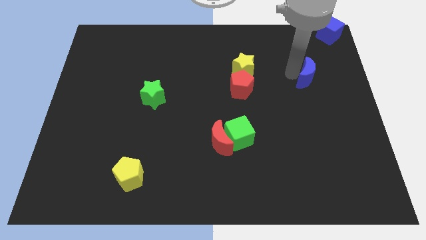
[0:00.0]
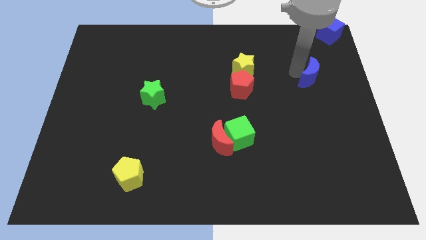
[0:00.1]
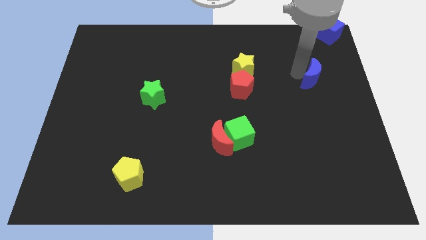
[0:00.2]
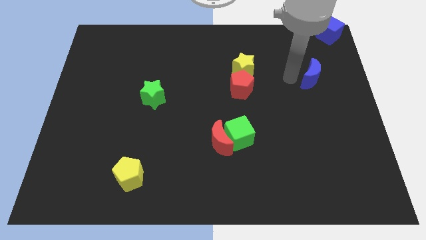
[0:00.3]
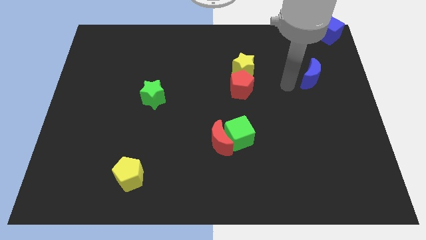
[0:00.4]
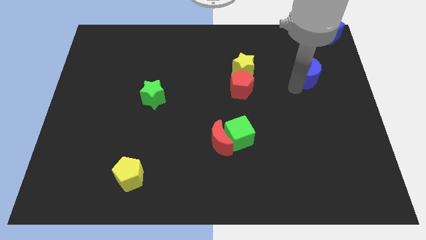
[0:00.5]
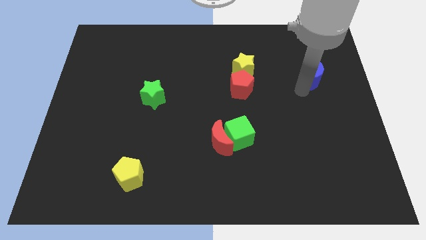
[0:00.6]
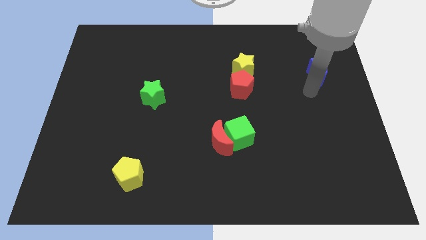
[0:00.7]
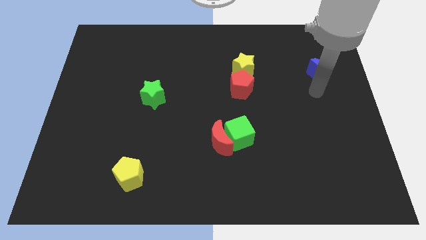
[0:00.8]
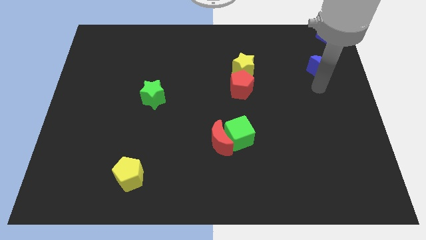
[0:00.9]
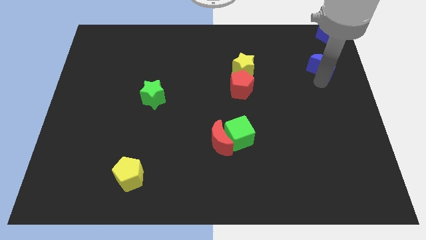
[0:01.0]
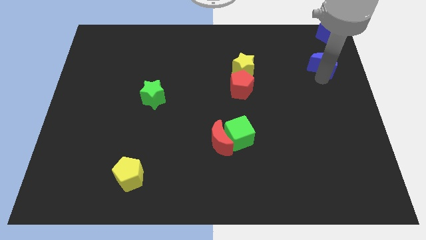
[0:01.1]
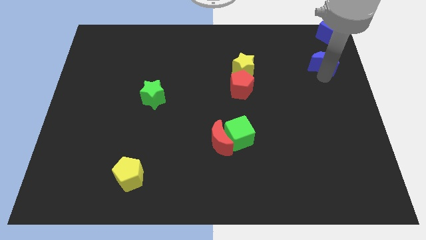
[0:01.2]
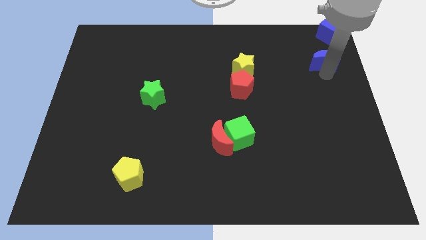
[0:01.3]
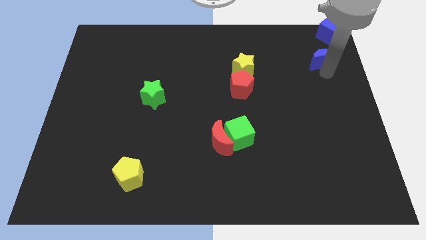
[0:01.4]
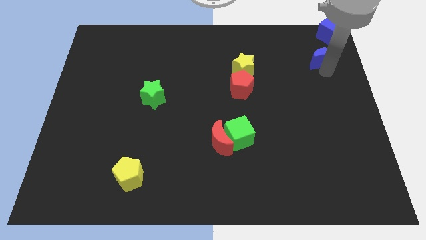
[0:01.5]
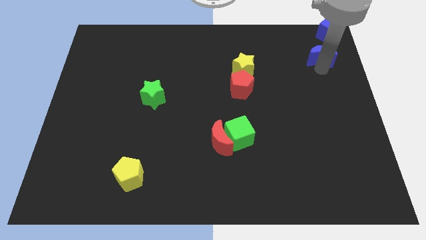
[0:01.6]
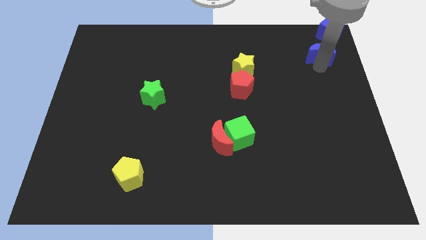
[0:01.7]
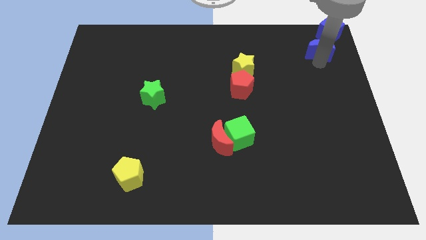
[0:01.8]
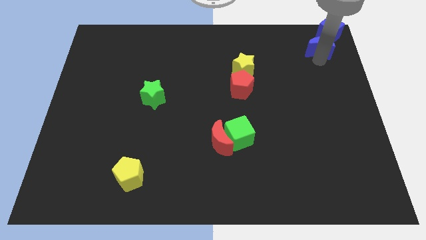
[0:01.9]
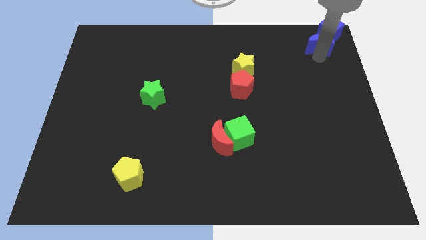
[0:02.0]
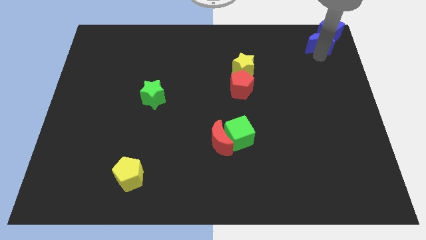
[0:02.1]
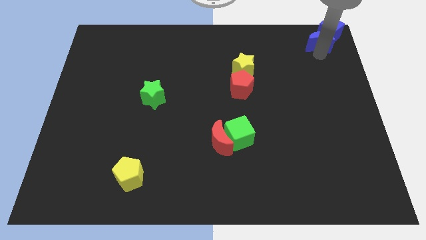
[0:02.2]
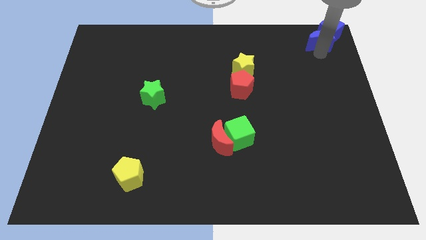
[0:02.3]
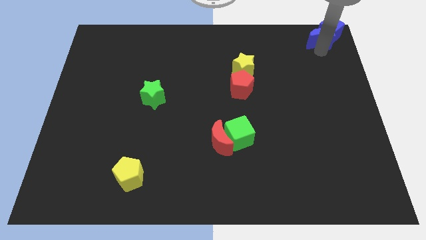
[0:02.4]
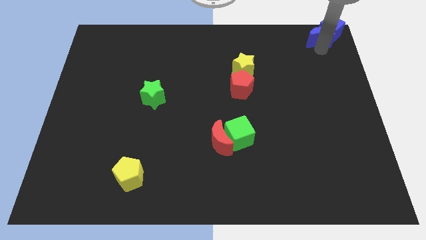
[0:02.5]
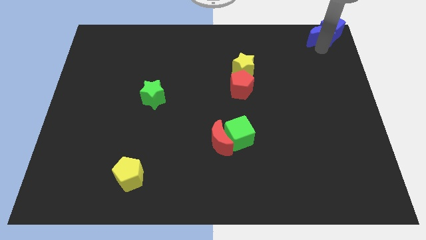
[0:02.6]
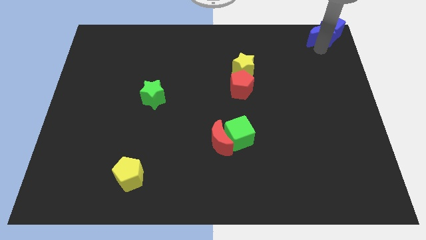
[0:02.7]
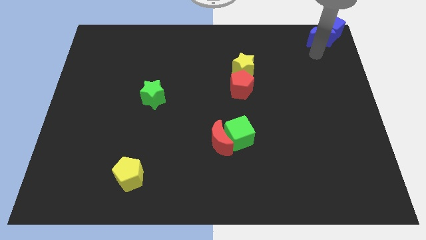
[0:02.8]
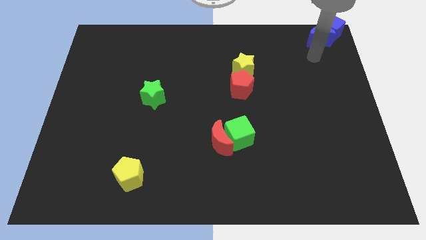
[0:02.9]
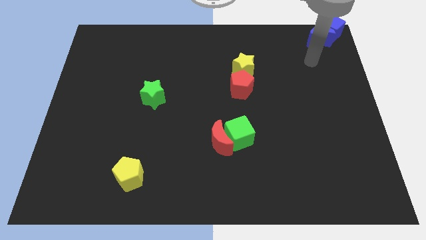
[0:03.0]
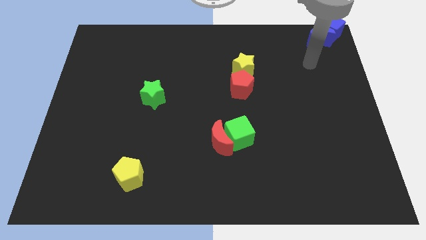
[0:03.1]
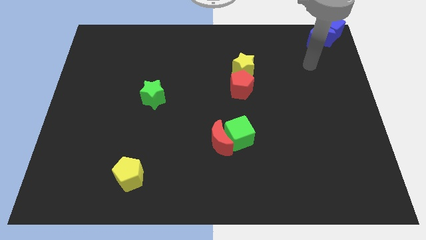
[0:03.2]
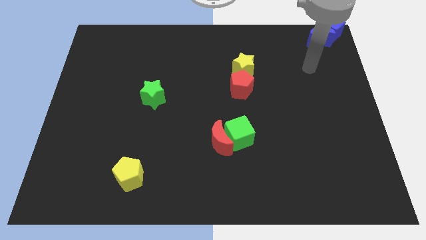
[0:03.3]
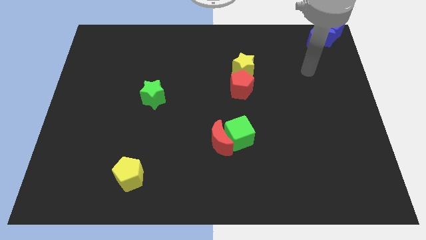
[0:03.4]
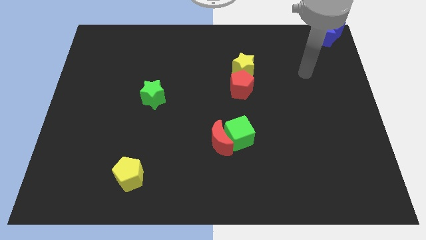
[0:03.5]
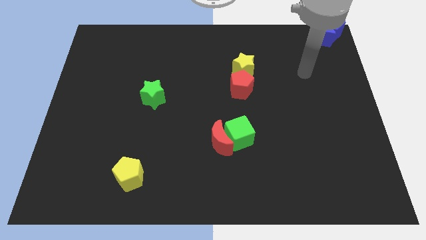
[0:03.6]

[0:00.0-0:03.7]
push the blue crescent into blue cube

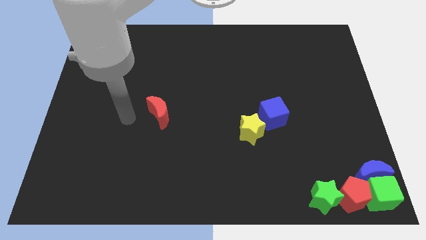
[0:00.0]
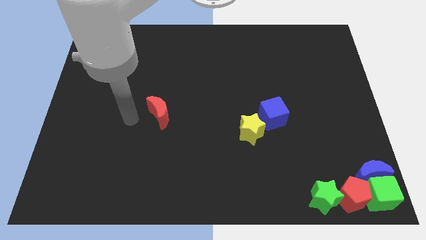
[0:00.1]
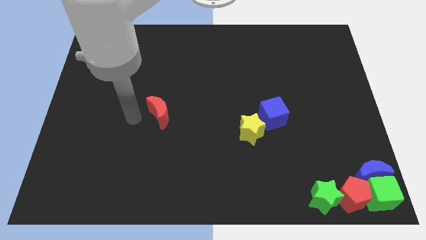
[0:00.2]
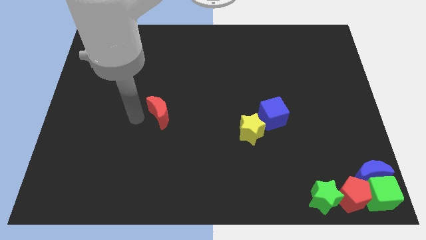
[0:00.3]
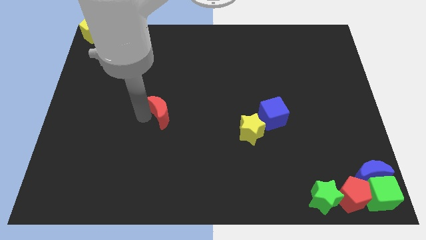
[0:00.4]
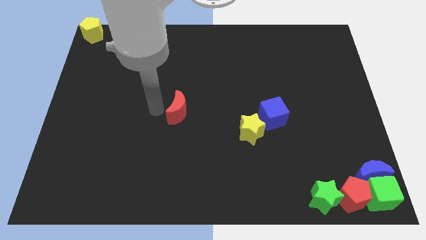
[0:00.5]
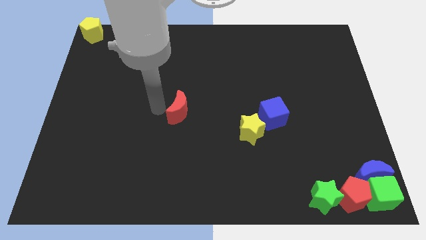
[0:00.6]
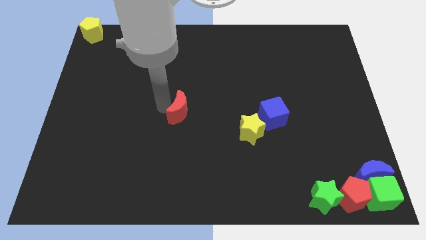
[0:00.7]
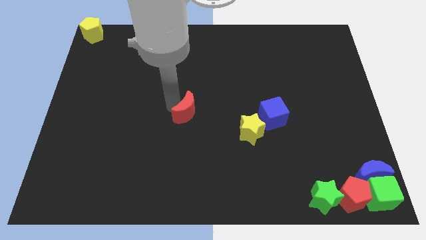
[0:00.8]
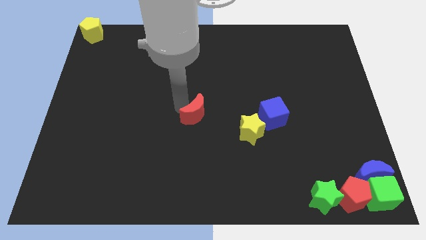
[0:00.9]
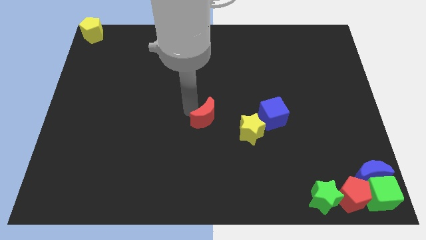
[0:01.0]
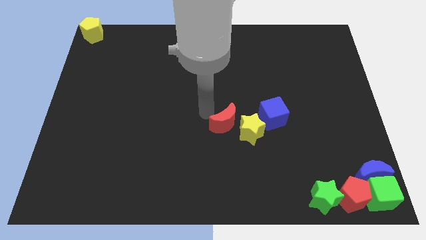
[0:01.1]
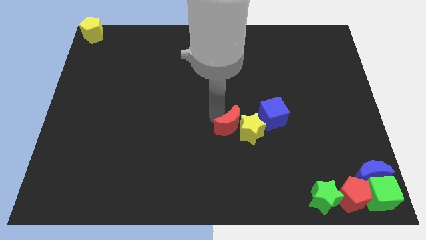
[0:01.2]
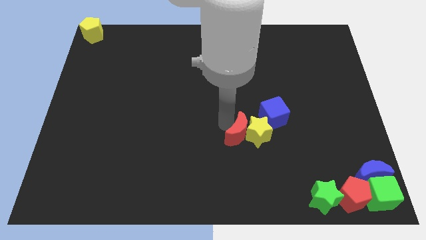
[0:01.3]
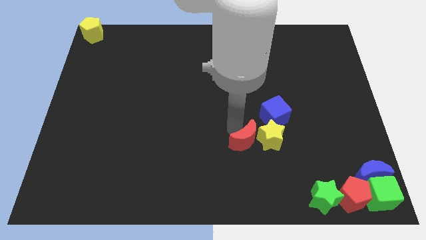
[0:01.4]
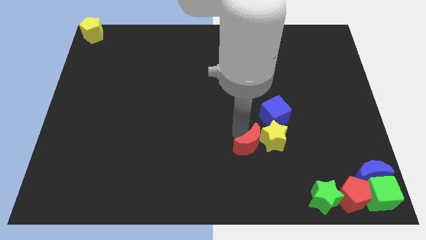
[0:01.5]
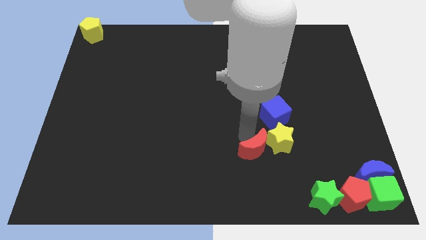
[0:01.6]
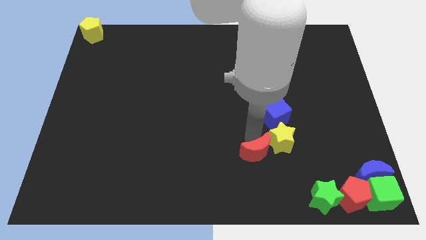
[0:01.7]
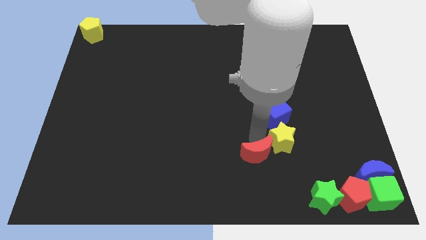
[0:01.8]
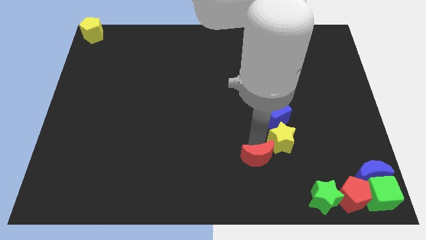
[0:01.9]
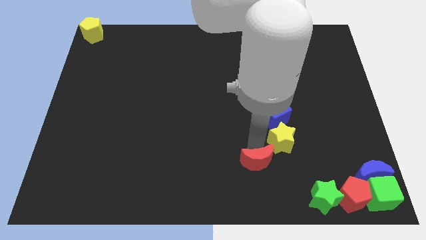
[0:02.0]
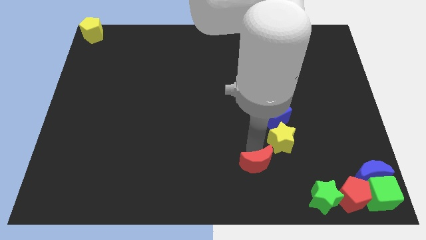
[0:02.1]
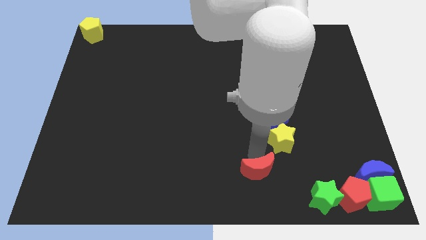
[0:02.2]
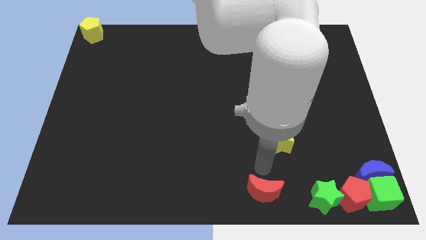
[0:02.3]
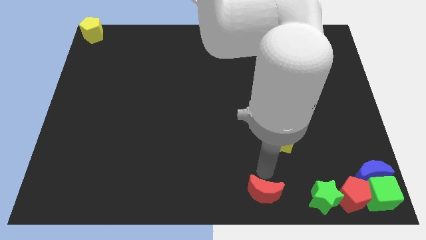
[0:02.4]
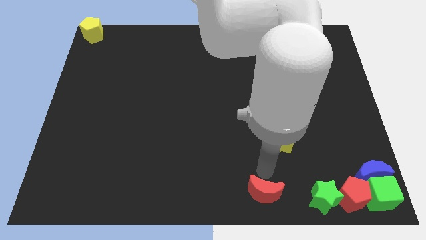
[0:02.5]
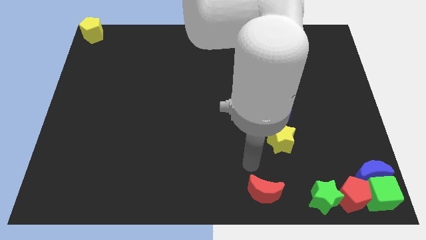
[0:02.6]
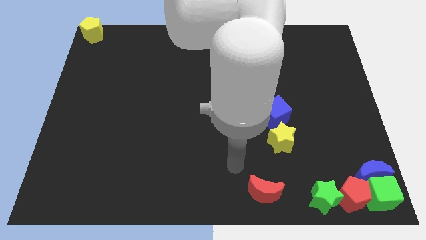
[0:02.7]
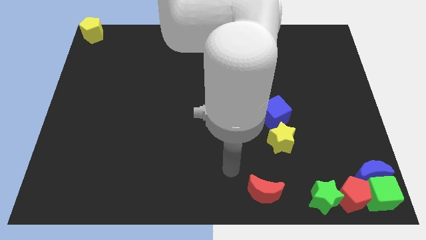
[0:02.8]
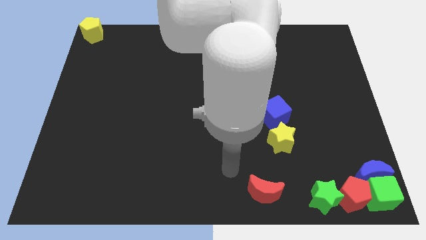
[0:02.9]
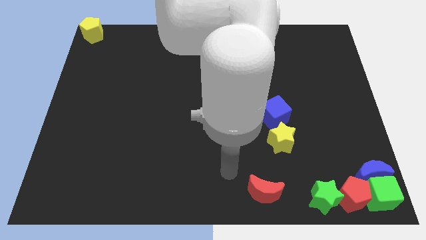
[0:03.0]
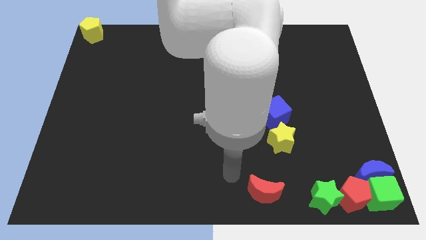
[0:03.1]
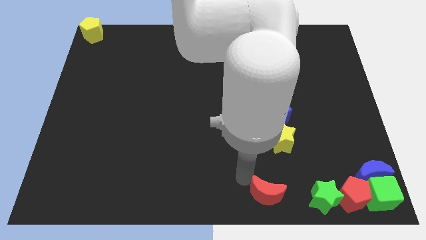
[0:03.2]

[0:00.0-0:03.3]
place red crescent parallel left to green star

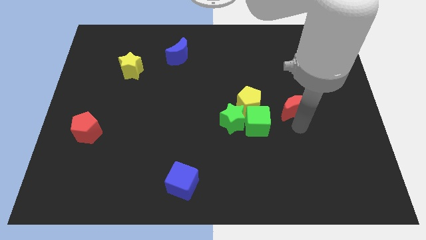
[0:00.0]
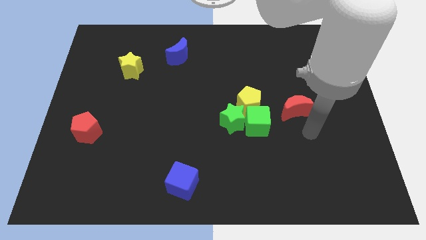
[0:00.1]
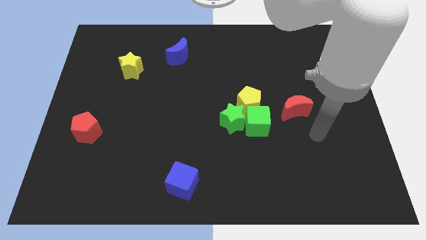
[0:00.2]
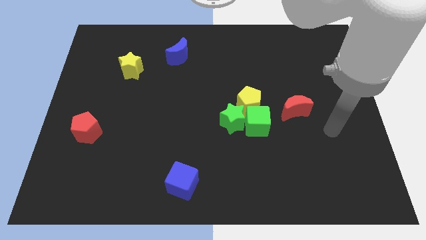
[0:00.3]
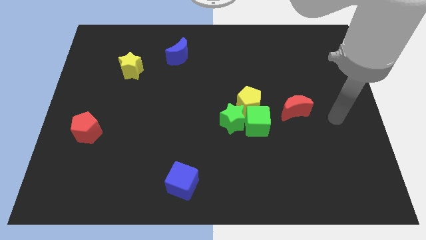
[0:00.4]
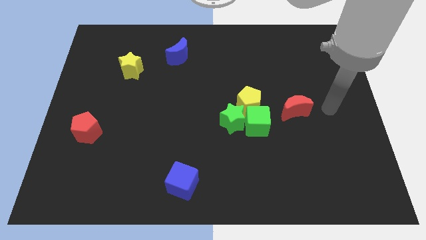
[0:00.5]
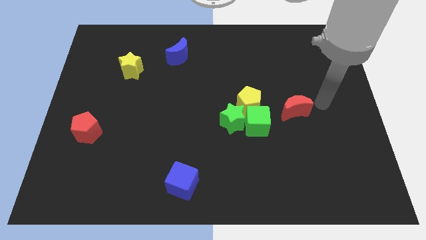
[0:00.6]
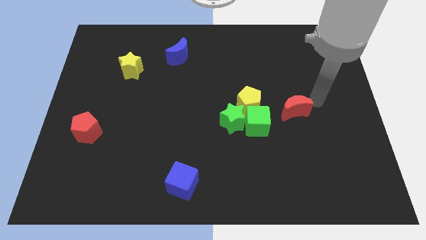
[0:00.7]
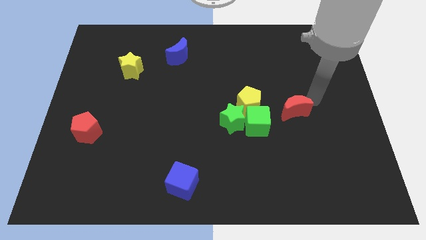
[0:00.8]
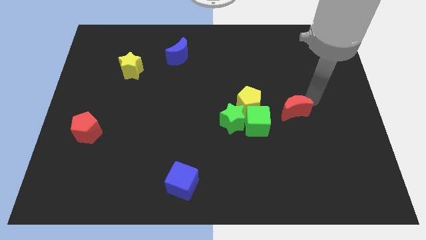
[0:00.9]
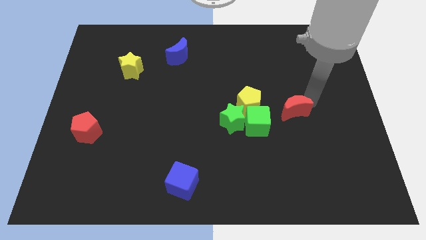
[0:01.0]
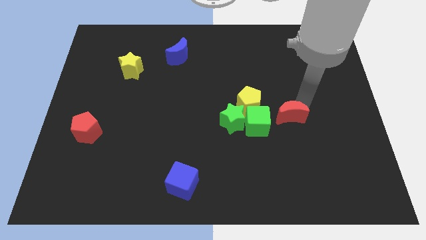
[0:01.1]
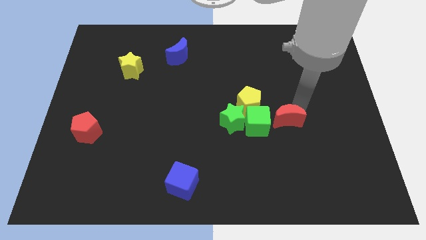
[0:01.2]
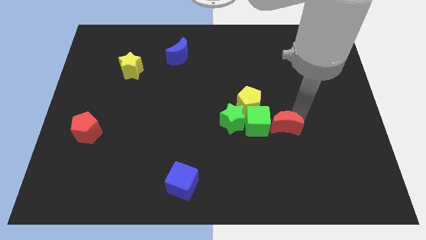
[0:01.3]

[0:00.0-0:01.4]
move the red crescent close to the green cube

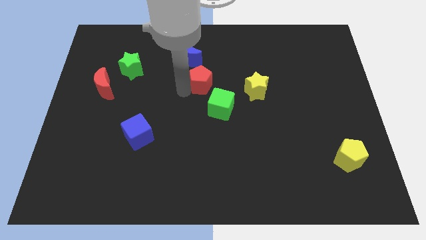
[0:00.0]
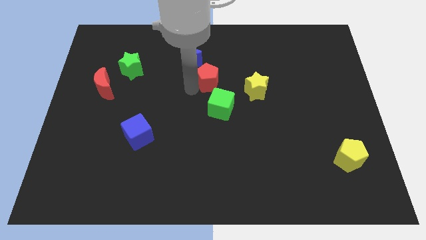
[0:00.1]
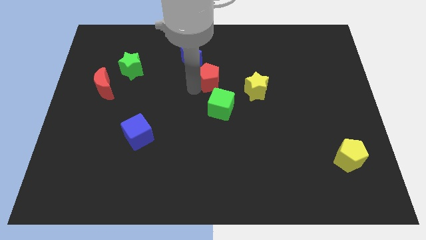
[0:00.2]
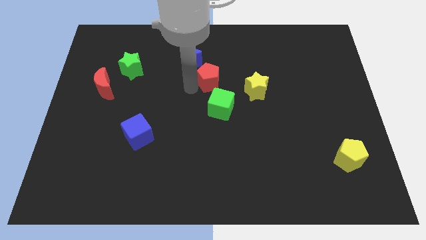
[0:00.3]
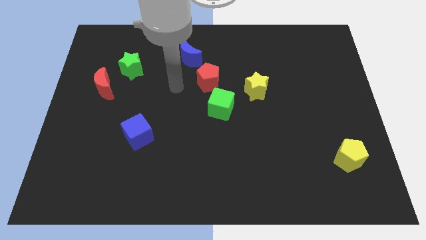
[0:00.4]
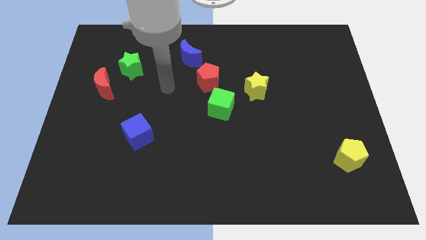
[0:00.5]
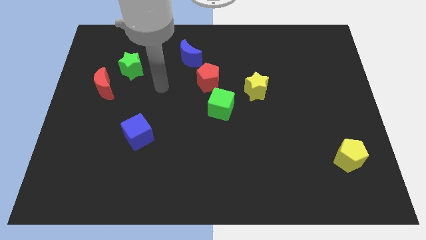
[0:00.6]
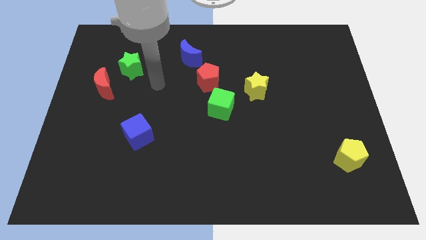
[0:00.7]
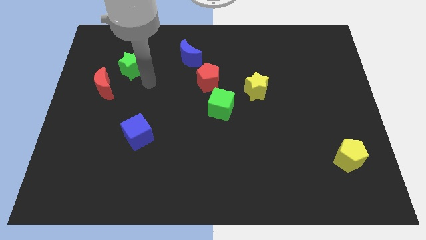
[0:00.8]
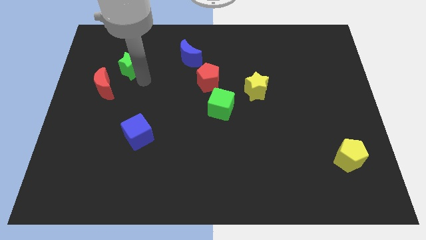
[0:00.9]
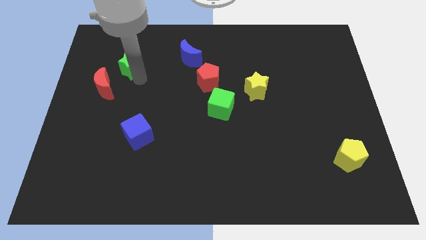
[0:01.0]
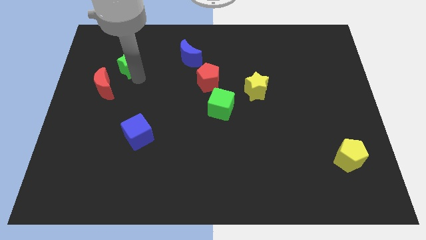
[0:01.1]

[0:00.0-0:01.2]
place the arm bottom to the green star
